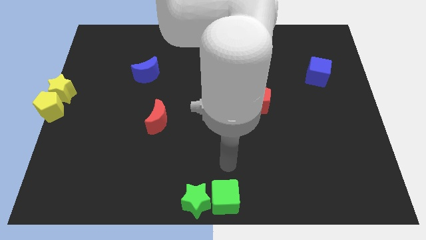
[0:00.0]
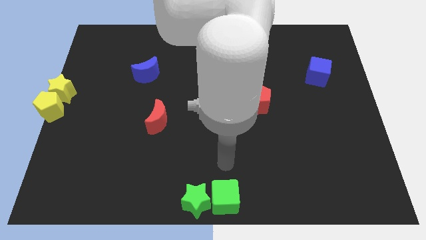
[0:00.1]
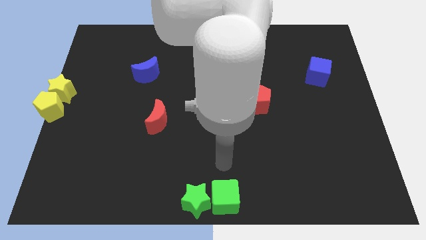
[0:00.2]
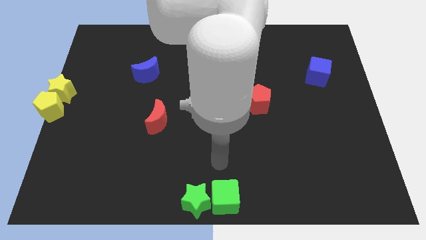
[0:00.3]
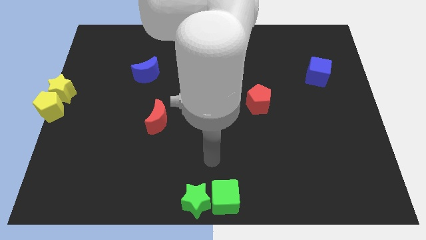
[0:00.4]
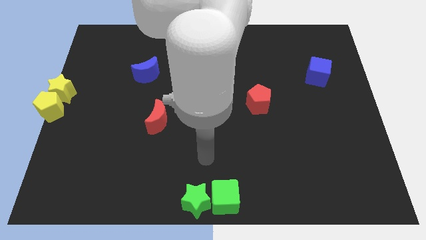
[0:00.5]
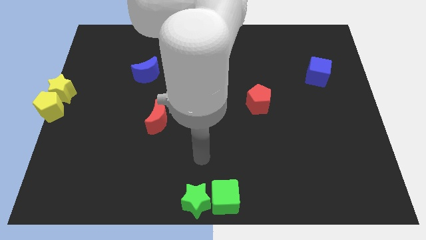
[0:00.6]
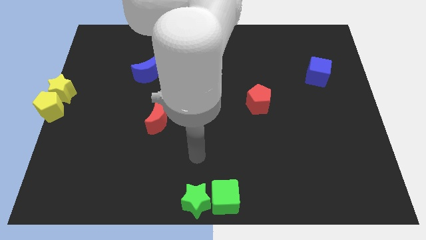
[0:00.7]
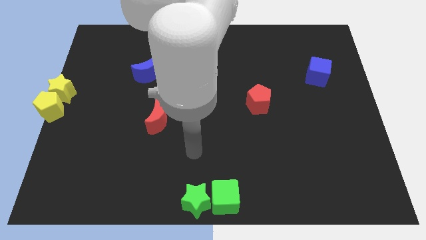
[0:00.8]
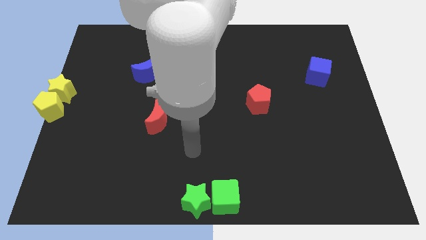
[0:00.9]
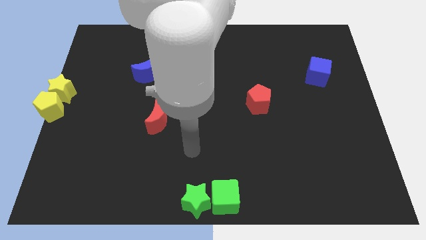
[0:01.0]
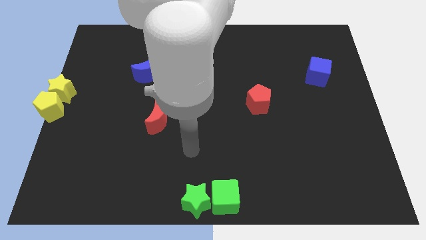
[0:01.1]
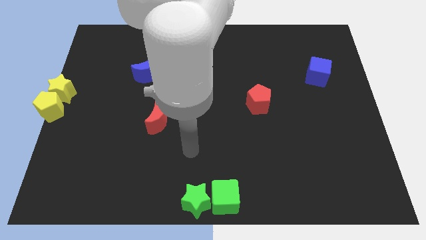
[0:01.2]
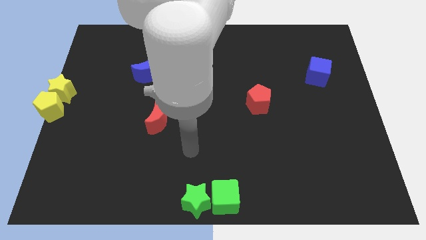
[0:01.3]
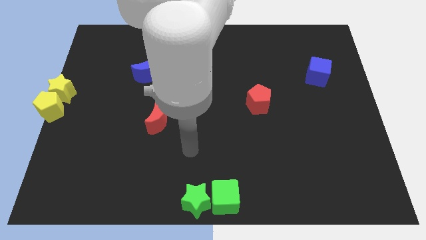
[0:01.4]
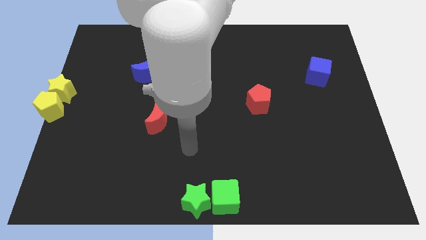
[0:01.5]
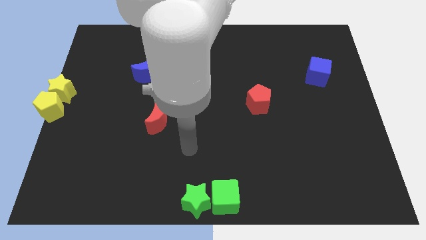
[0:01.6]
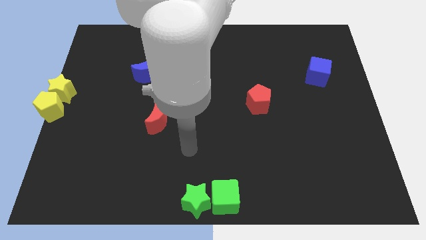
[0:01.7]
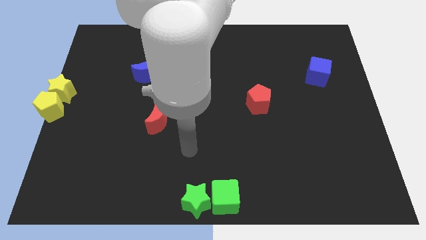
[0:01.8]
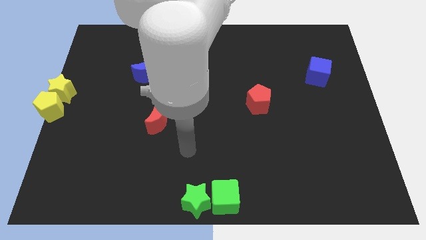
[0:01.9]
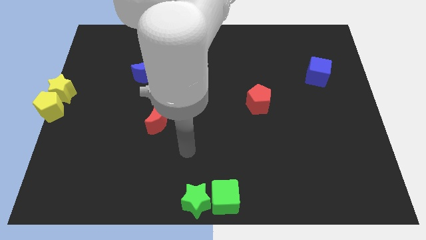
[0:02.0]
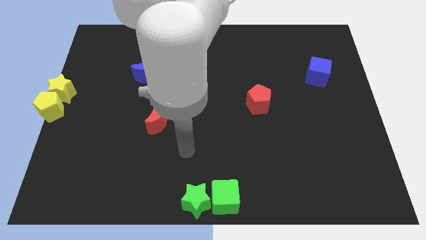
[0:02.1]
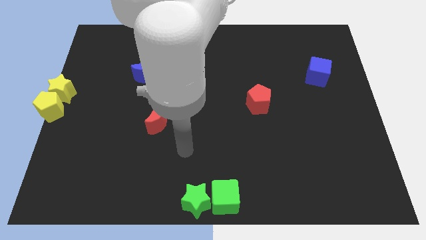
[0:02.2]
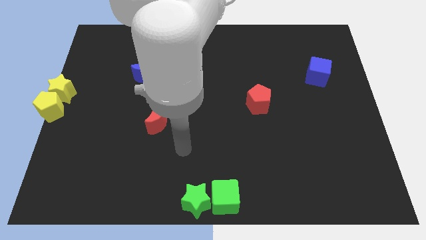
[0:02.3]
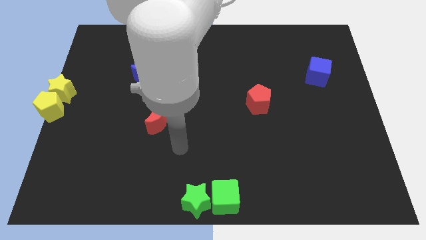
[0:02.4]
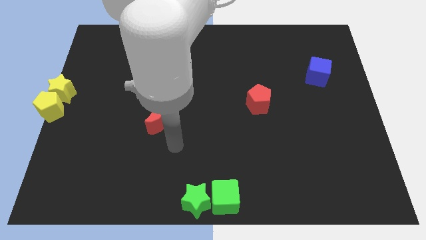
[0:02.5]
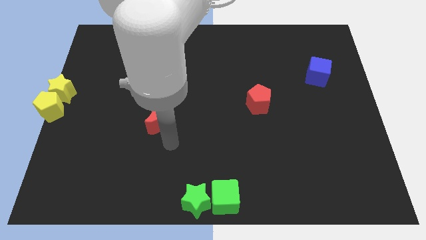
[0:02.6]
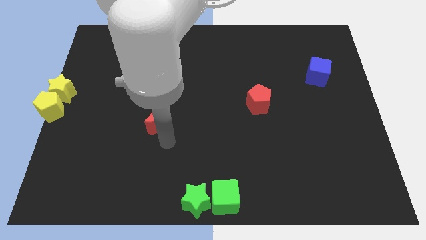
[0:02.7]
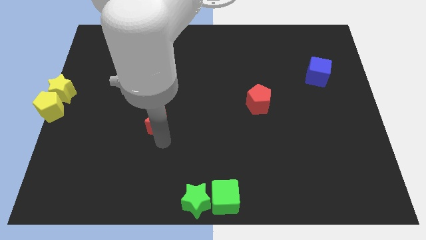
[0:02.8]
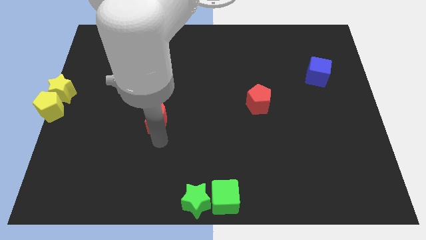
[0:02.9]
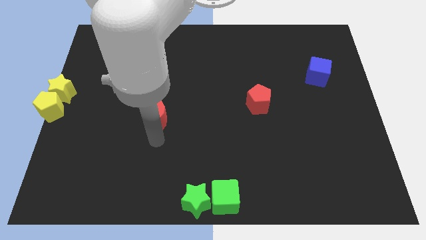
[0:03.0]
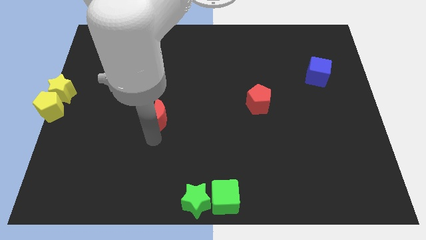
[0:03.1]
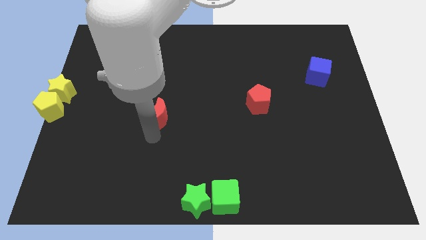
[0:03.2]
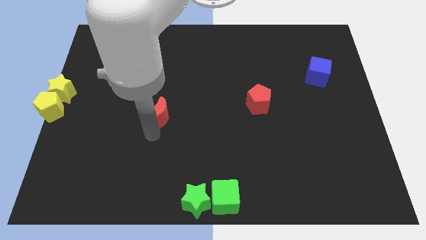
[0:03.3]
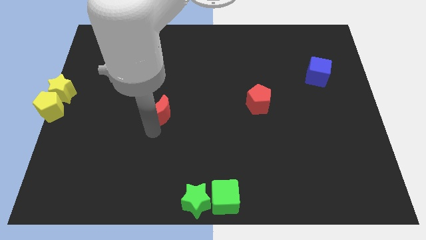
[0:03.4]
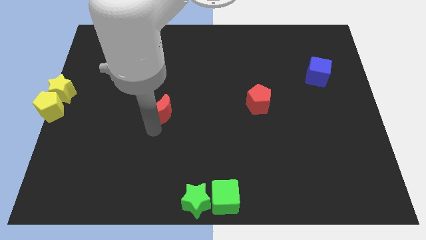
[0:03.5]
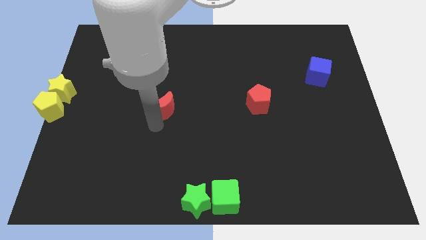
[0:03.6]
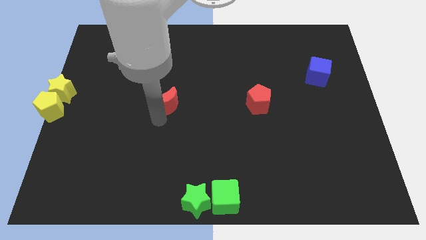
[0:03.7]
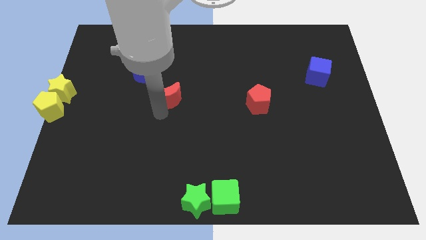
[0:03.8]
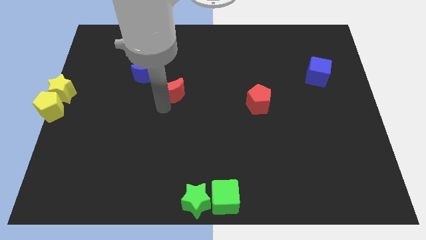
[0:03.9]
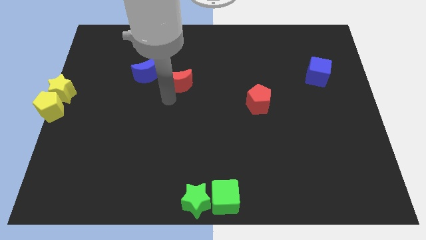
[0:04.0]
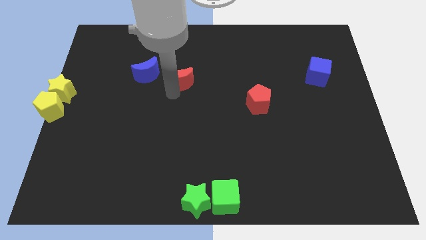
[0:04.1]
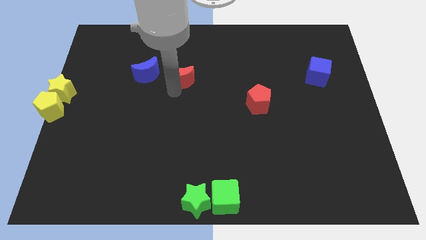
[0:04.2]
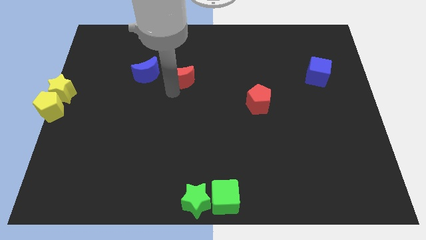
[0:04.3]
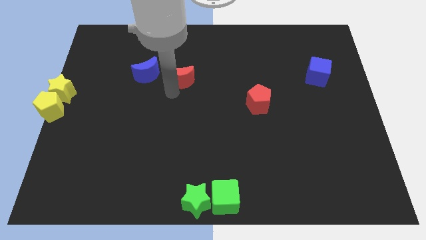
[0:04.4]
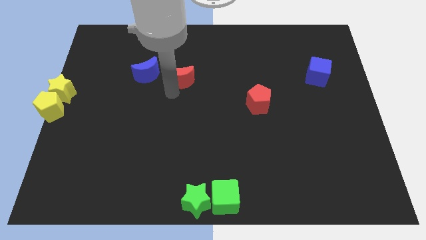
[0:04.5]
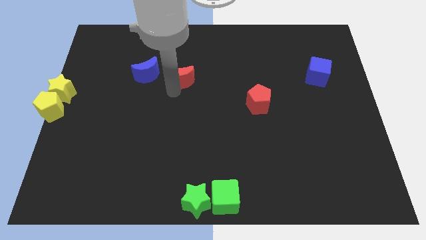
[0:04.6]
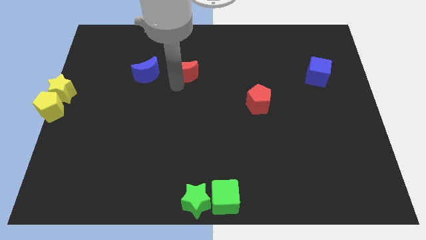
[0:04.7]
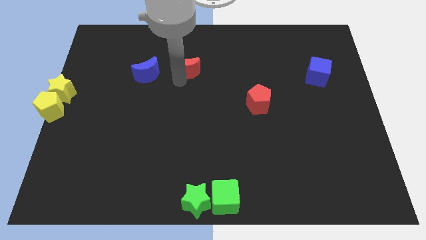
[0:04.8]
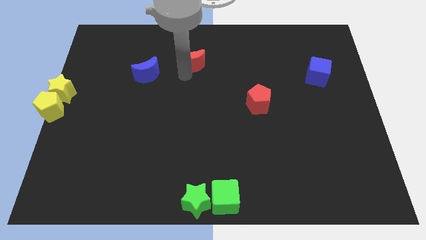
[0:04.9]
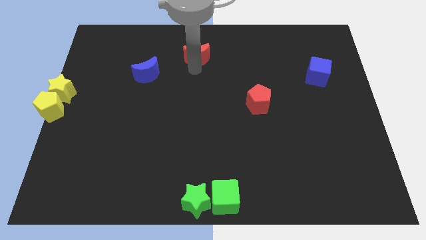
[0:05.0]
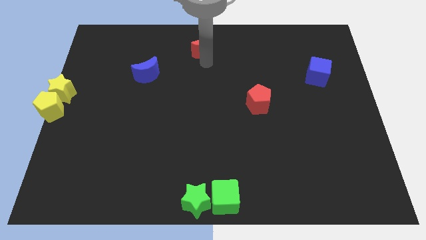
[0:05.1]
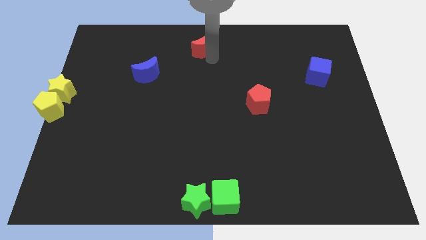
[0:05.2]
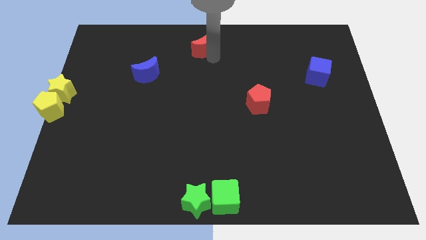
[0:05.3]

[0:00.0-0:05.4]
move the red moon to the top center of the table

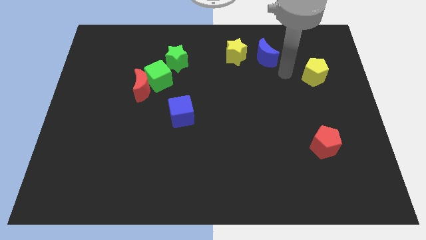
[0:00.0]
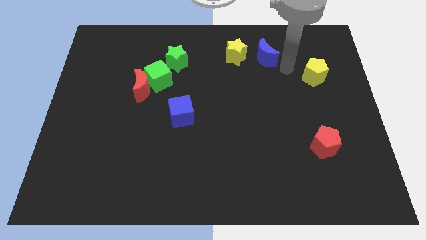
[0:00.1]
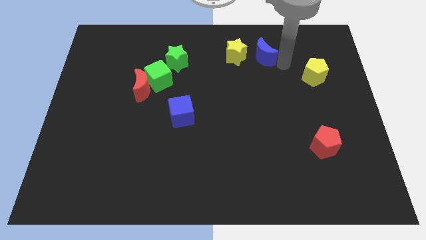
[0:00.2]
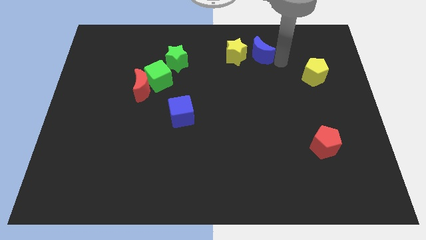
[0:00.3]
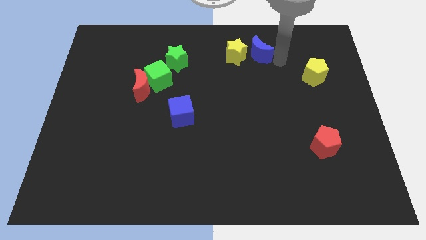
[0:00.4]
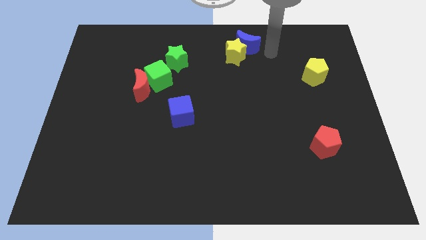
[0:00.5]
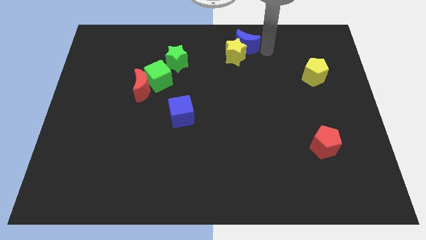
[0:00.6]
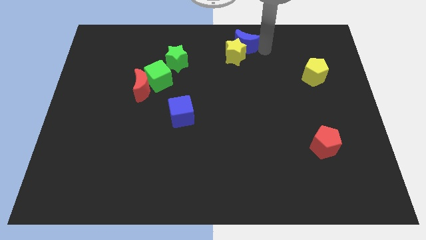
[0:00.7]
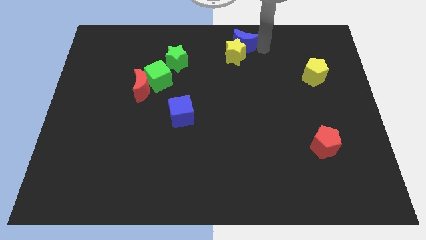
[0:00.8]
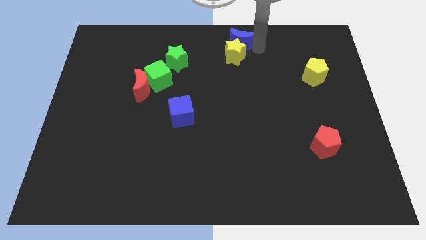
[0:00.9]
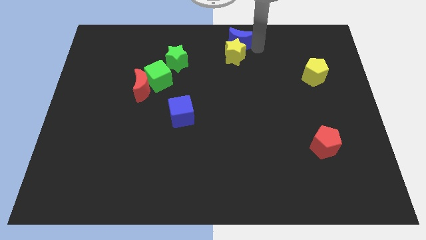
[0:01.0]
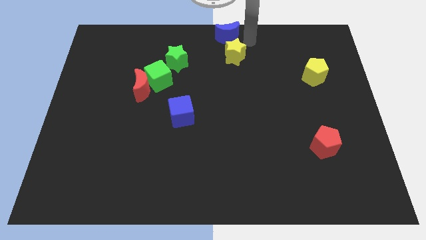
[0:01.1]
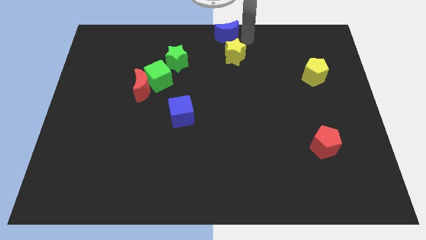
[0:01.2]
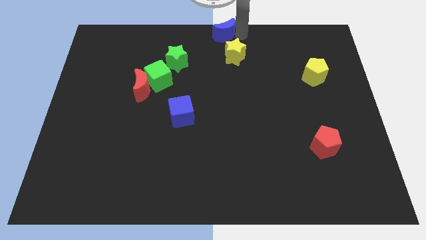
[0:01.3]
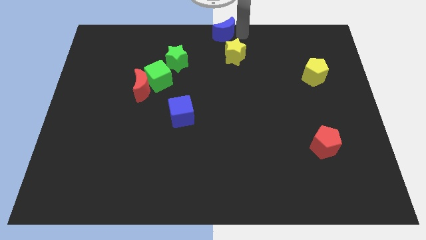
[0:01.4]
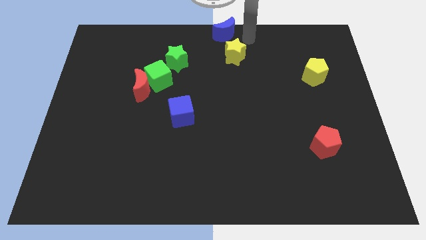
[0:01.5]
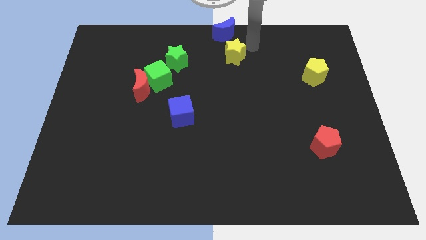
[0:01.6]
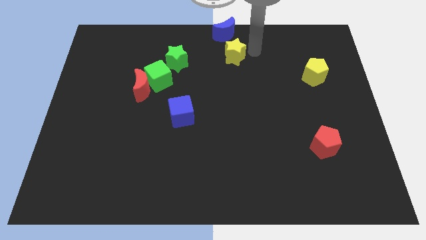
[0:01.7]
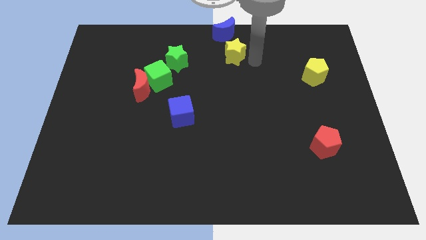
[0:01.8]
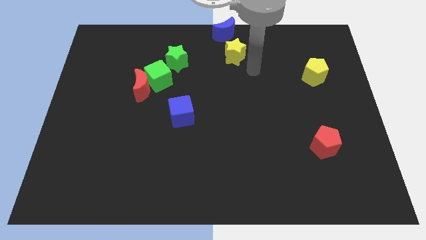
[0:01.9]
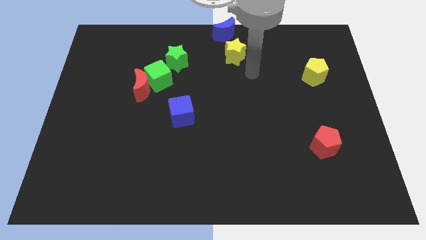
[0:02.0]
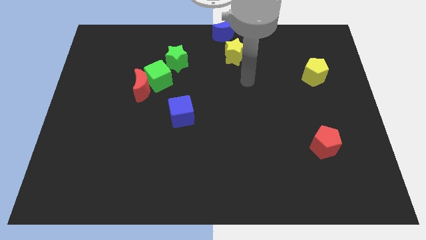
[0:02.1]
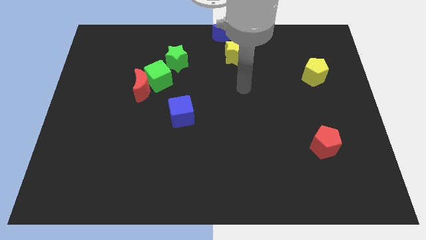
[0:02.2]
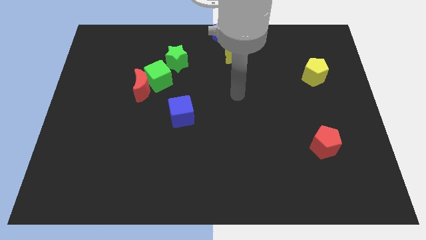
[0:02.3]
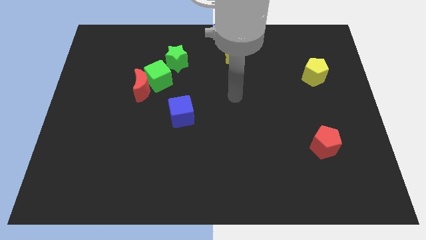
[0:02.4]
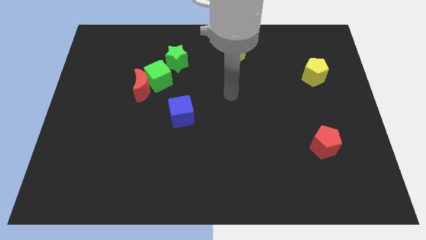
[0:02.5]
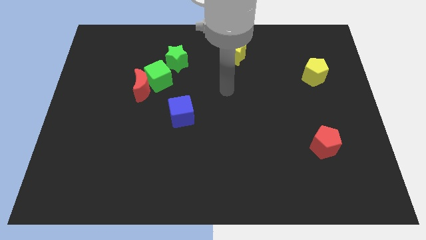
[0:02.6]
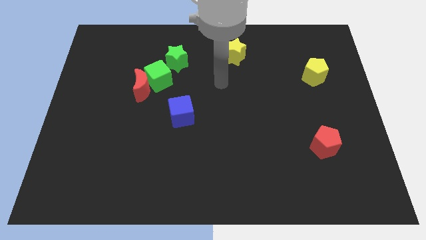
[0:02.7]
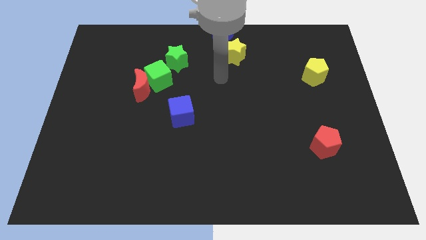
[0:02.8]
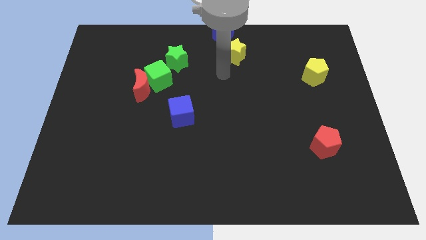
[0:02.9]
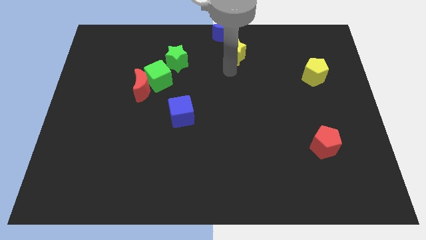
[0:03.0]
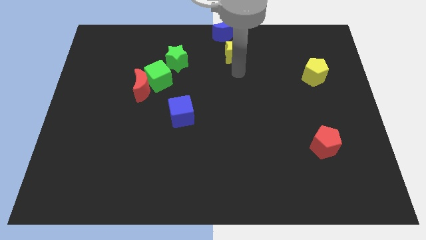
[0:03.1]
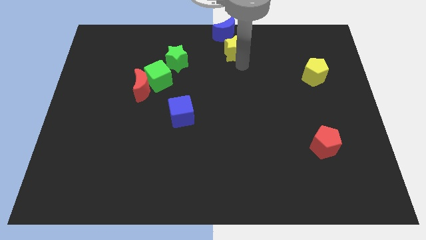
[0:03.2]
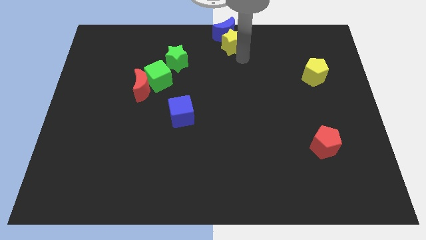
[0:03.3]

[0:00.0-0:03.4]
push the blue crescent towards the top center of the board
